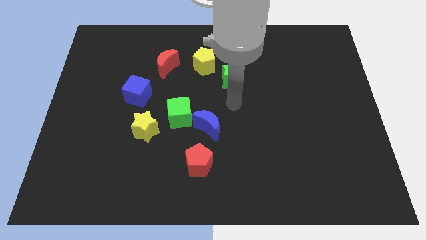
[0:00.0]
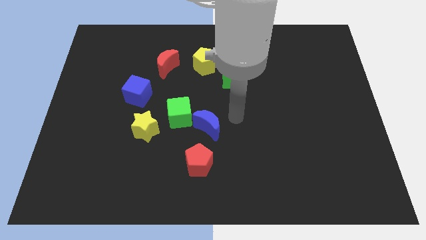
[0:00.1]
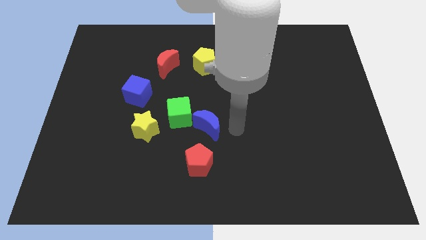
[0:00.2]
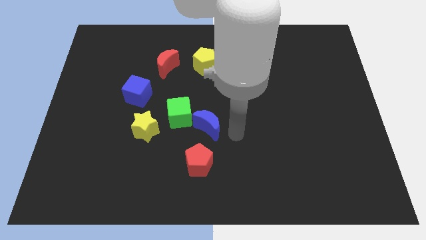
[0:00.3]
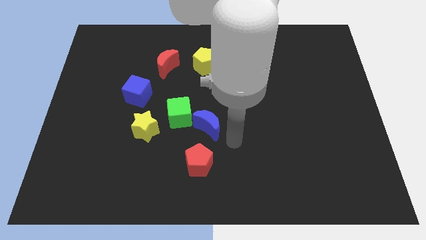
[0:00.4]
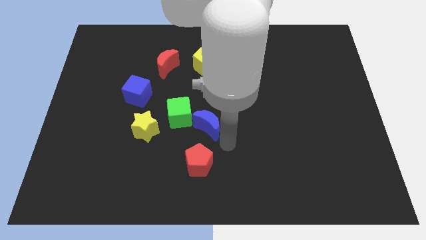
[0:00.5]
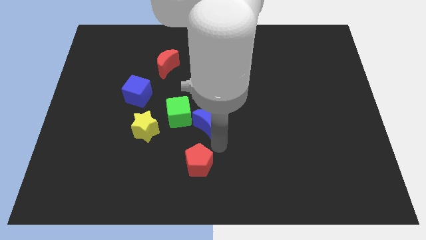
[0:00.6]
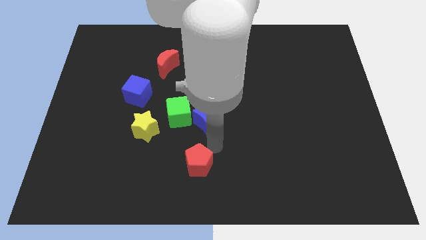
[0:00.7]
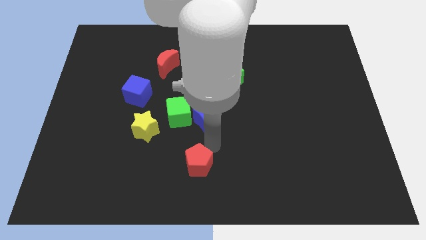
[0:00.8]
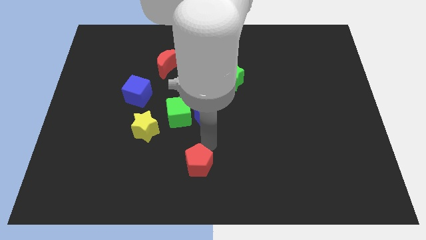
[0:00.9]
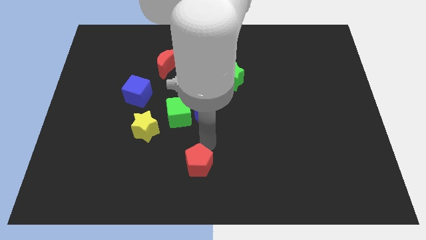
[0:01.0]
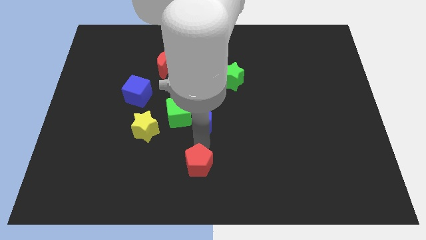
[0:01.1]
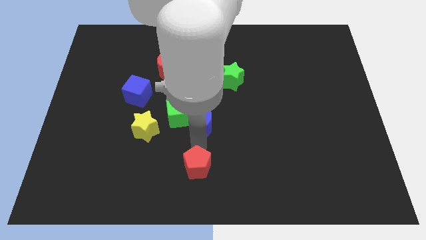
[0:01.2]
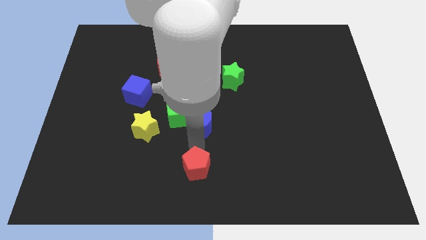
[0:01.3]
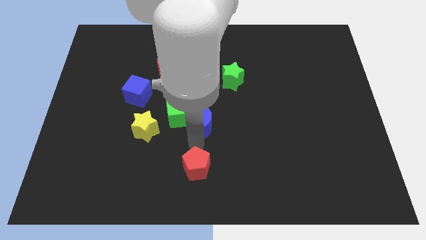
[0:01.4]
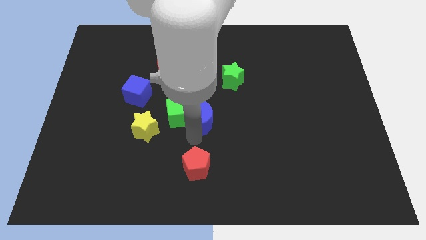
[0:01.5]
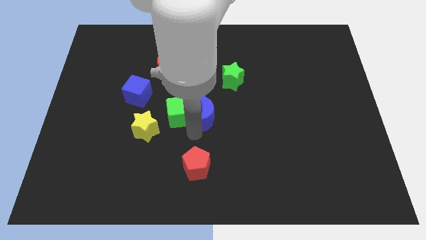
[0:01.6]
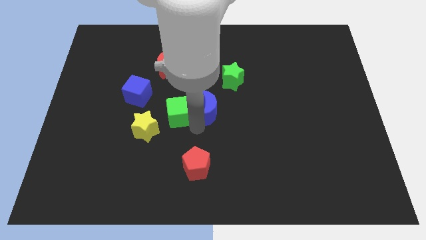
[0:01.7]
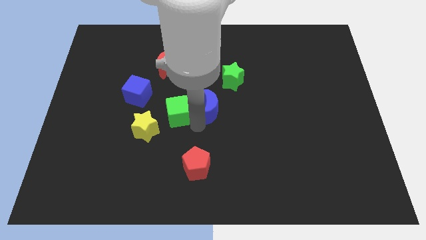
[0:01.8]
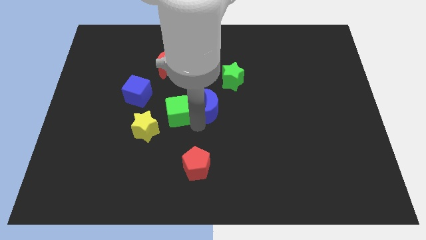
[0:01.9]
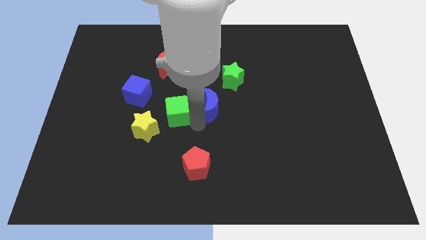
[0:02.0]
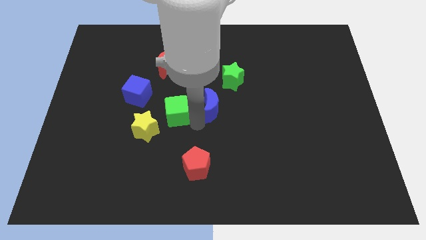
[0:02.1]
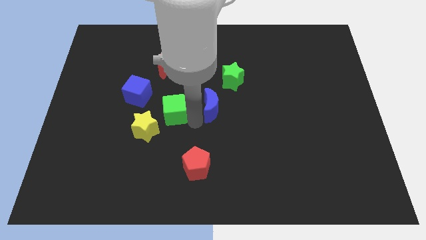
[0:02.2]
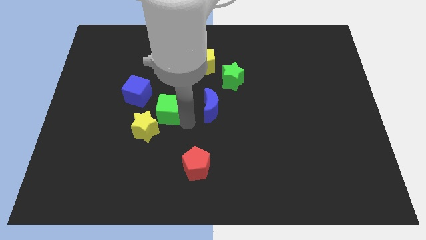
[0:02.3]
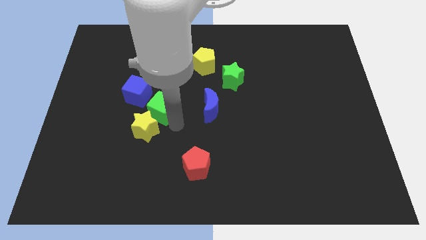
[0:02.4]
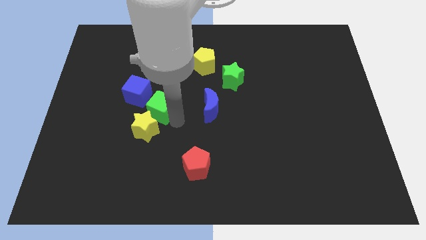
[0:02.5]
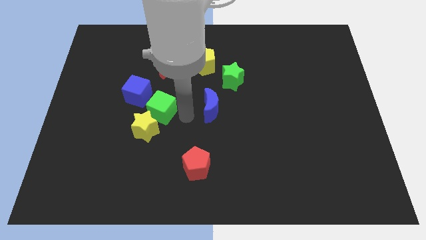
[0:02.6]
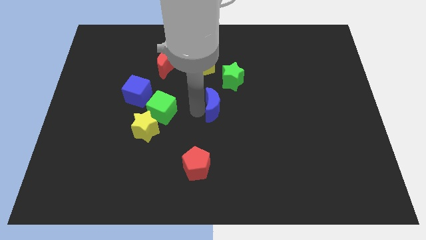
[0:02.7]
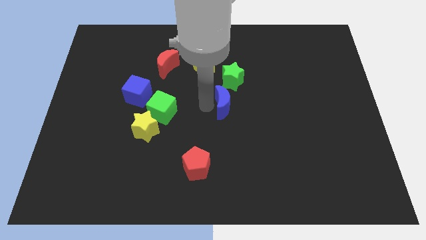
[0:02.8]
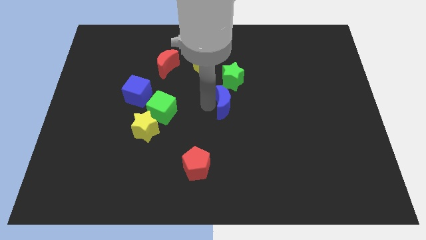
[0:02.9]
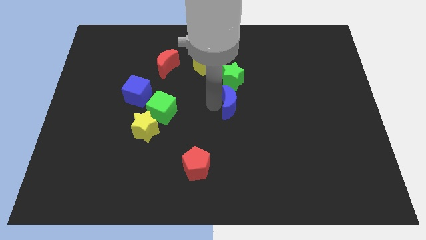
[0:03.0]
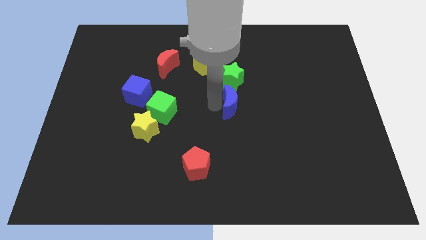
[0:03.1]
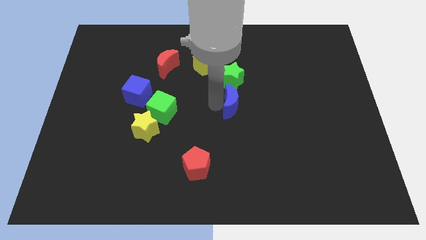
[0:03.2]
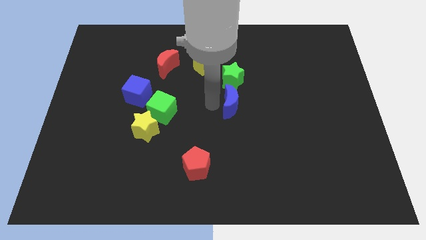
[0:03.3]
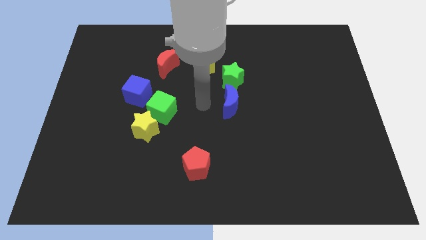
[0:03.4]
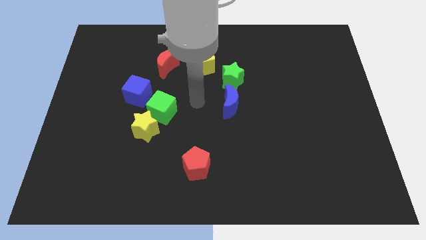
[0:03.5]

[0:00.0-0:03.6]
move blue moon to the bottom side of the green star

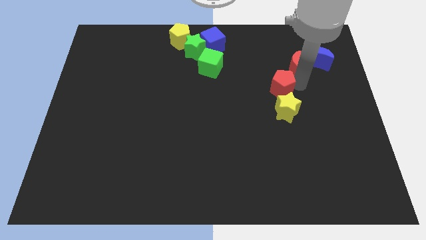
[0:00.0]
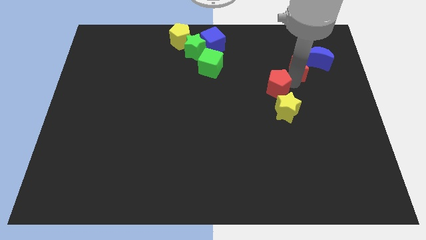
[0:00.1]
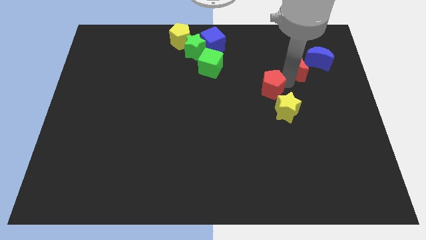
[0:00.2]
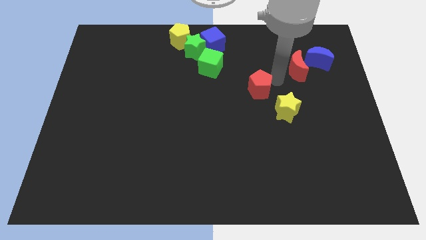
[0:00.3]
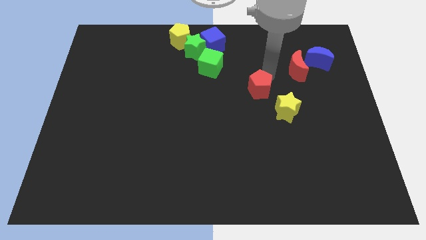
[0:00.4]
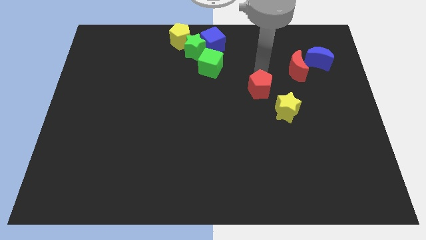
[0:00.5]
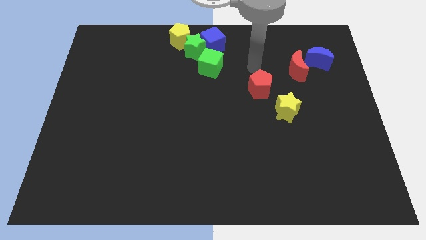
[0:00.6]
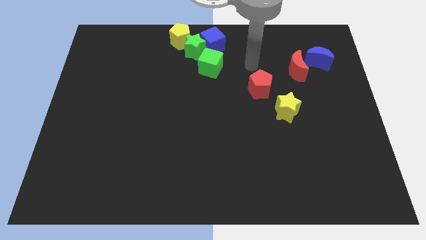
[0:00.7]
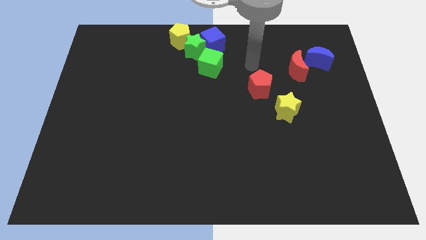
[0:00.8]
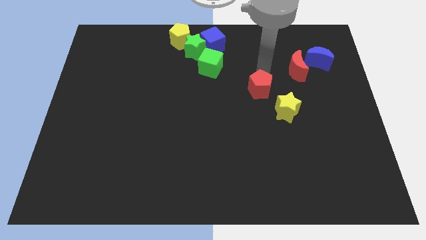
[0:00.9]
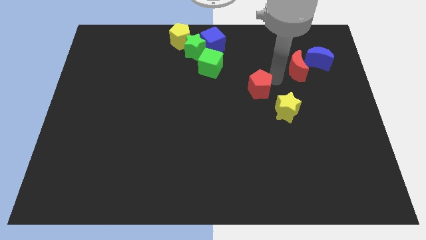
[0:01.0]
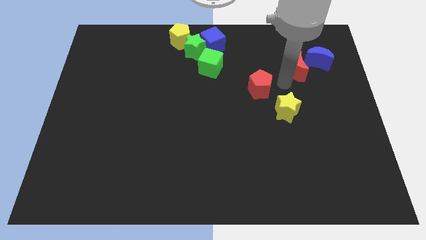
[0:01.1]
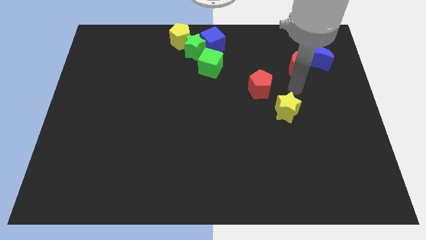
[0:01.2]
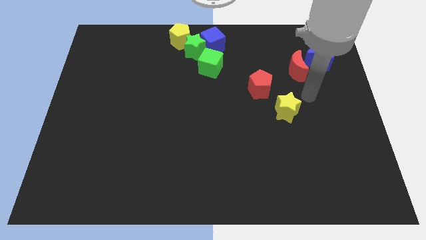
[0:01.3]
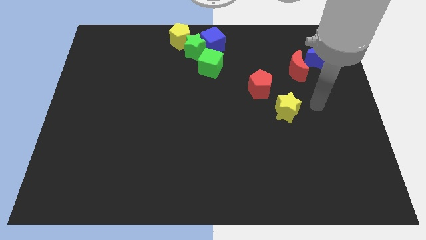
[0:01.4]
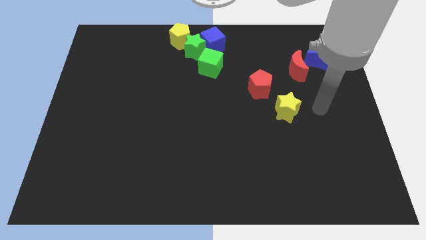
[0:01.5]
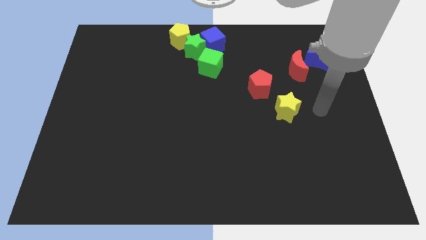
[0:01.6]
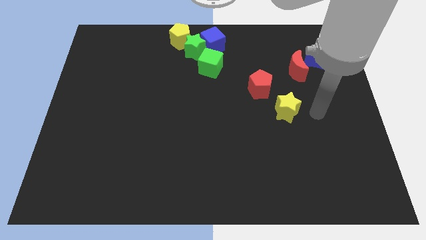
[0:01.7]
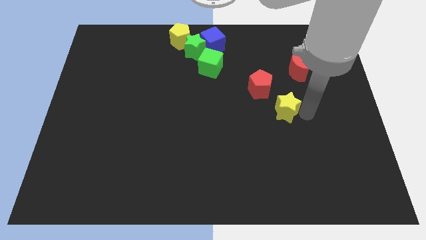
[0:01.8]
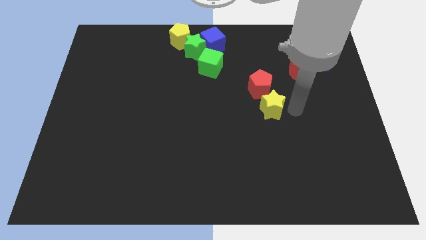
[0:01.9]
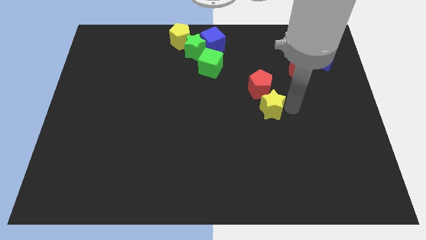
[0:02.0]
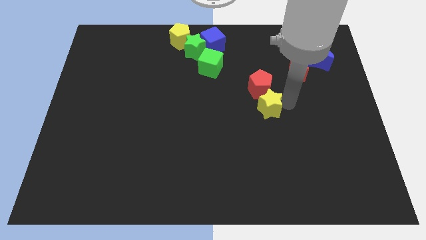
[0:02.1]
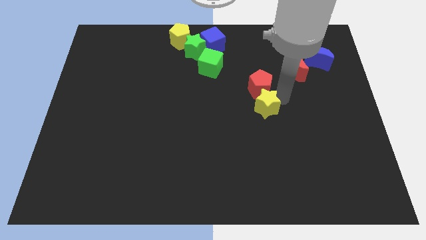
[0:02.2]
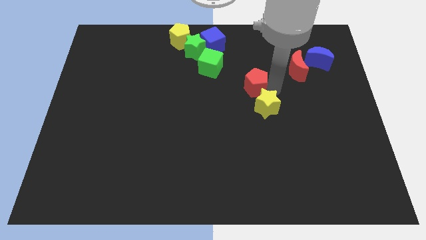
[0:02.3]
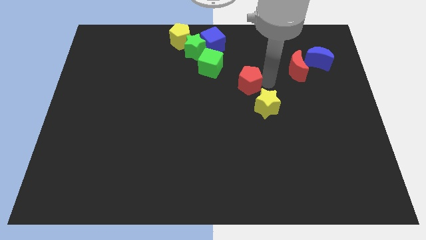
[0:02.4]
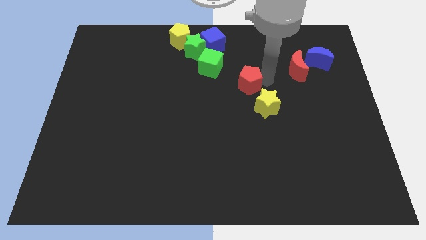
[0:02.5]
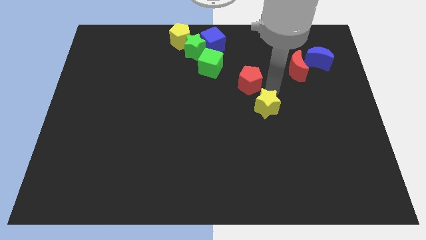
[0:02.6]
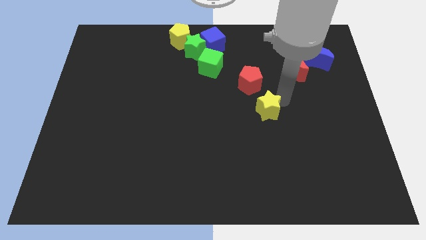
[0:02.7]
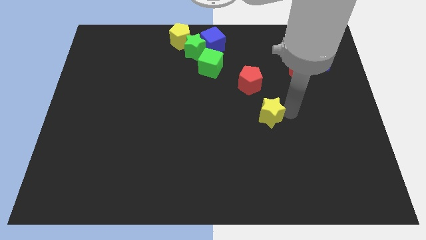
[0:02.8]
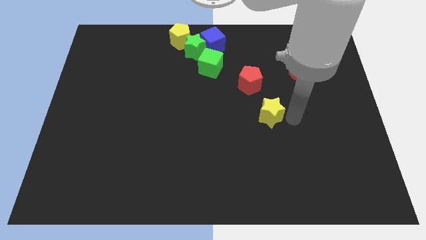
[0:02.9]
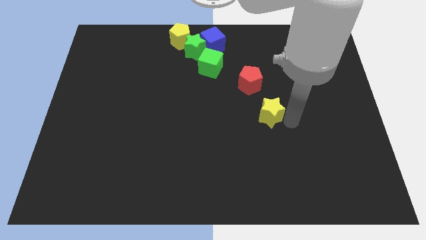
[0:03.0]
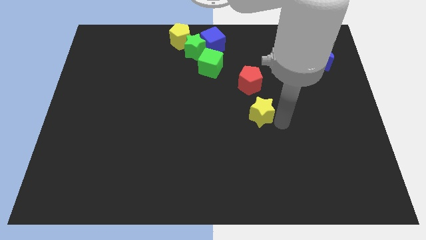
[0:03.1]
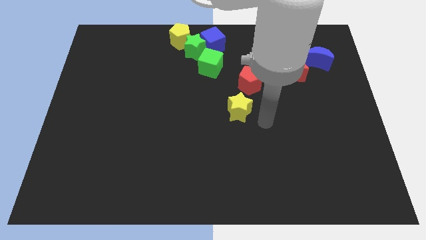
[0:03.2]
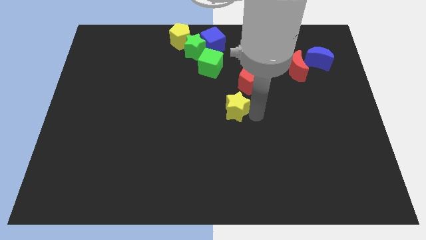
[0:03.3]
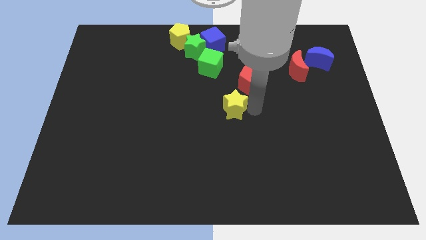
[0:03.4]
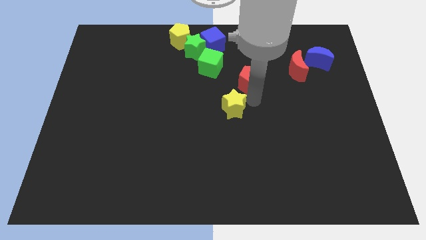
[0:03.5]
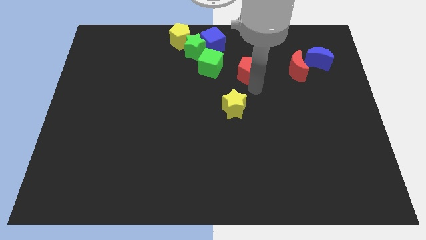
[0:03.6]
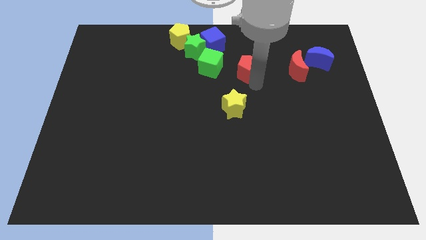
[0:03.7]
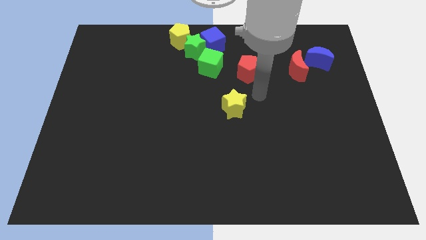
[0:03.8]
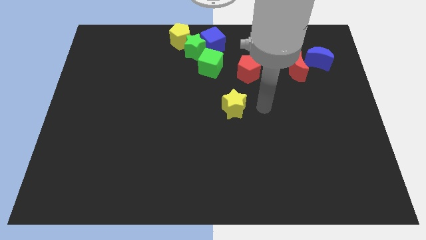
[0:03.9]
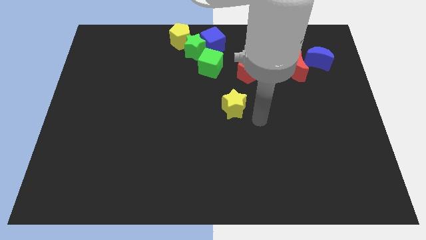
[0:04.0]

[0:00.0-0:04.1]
separate yellow star and red pentagon

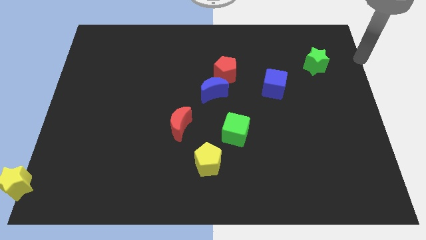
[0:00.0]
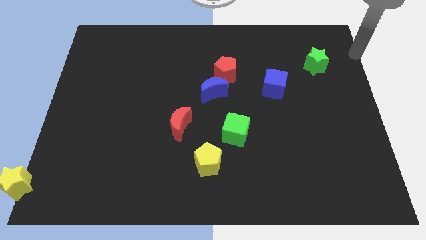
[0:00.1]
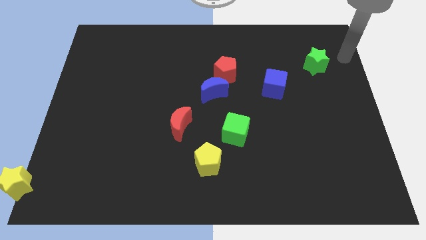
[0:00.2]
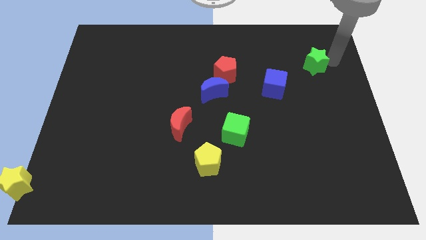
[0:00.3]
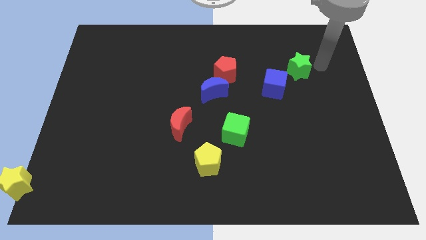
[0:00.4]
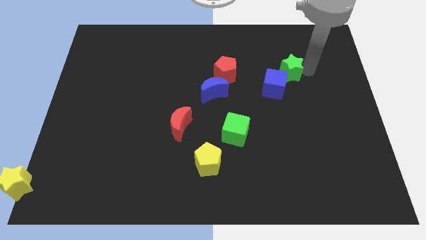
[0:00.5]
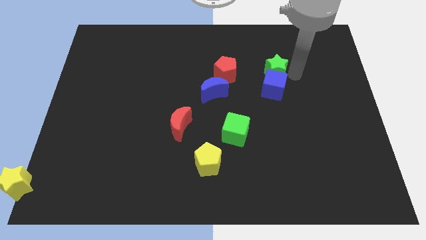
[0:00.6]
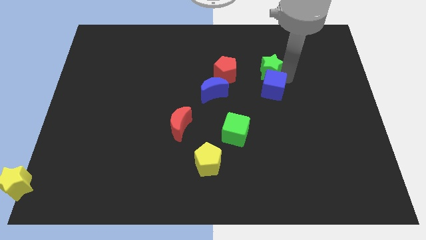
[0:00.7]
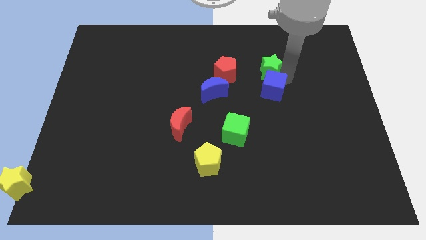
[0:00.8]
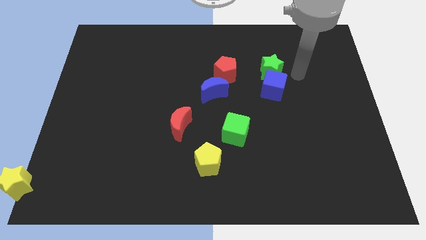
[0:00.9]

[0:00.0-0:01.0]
place green star above blue cube

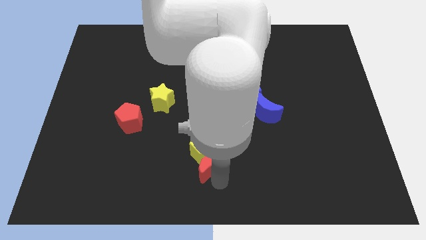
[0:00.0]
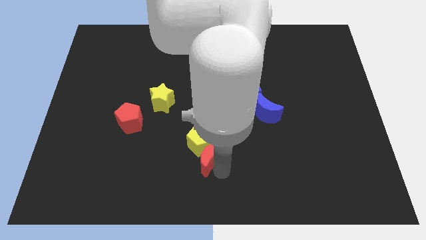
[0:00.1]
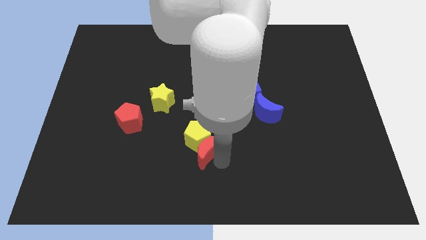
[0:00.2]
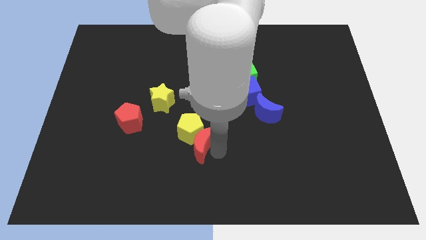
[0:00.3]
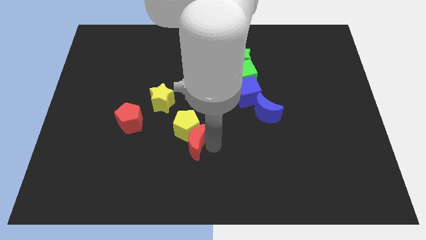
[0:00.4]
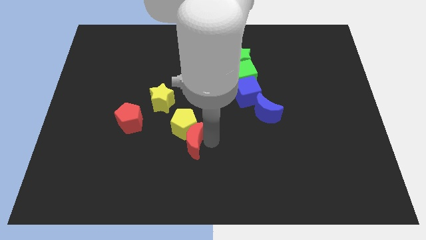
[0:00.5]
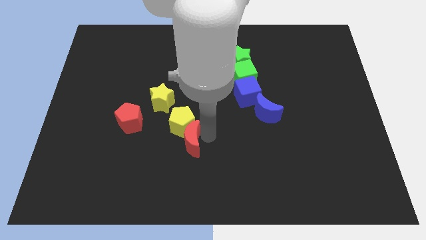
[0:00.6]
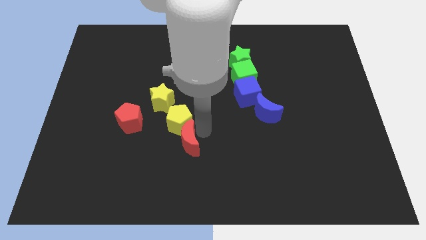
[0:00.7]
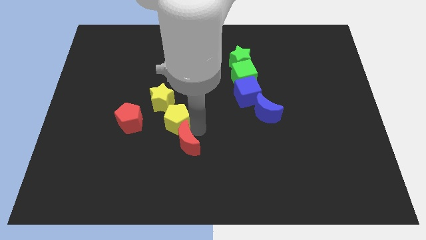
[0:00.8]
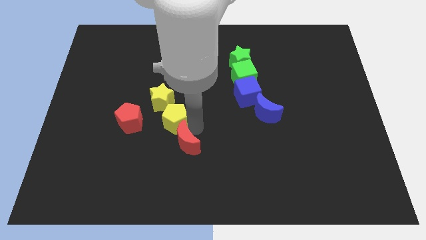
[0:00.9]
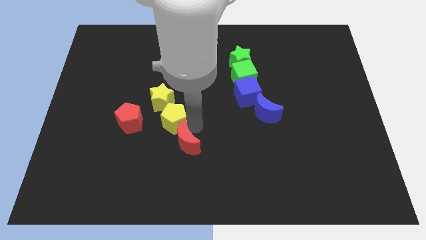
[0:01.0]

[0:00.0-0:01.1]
push the red moon upwards
